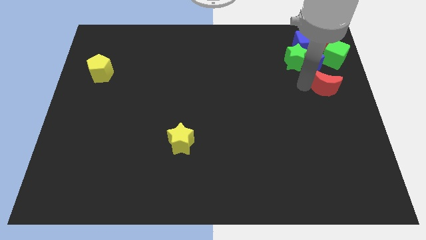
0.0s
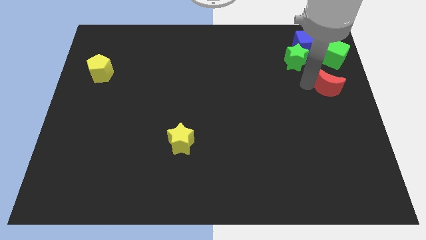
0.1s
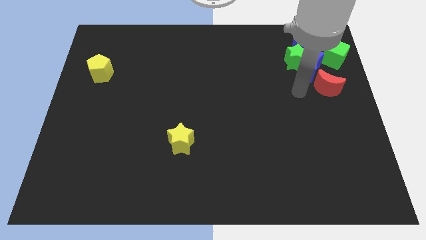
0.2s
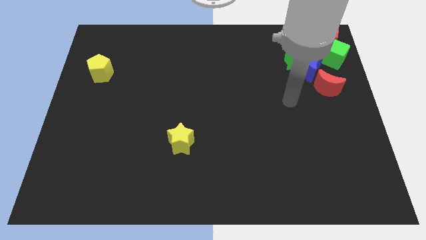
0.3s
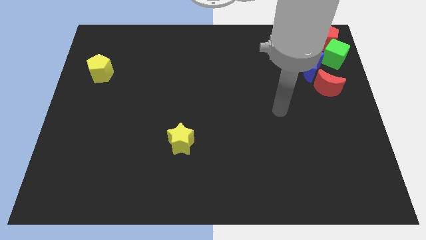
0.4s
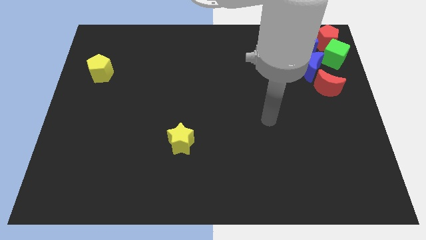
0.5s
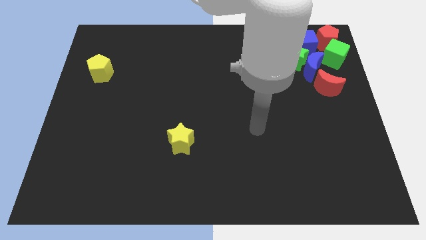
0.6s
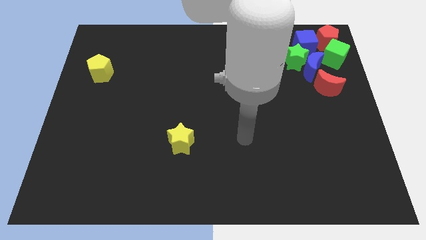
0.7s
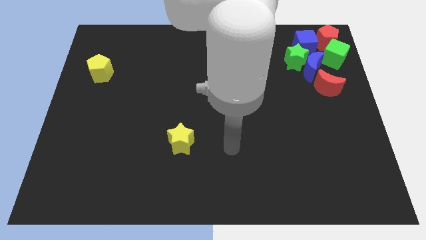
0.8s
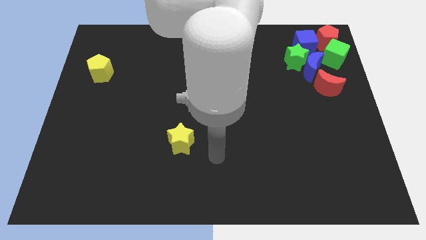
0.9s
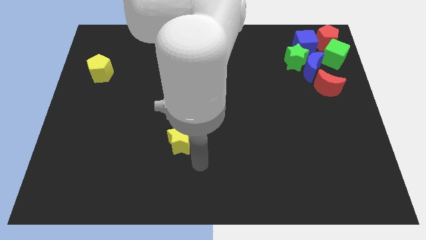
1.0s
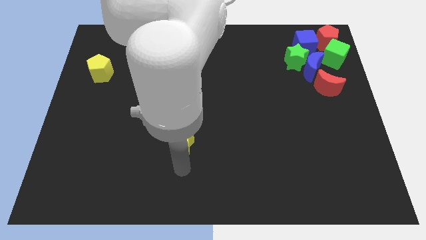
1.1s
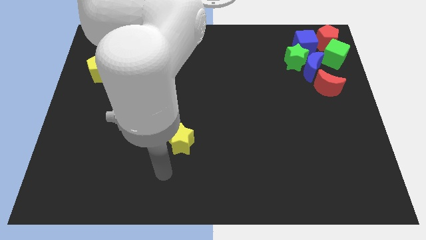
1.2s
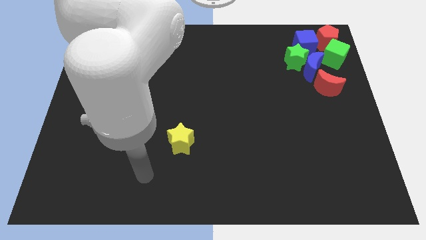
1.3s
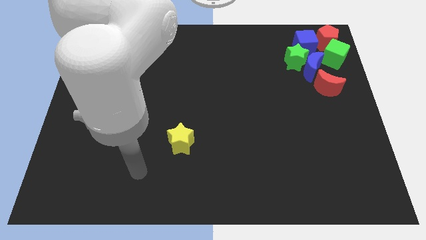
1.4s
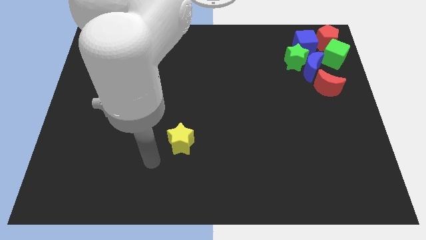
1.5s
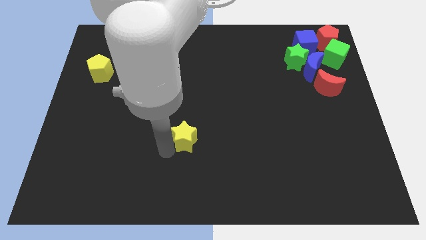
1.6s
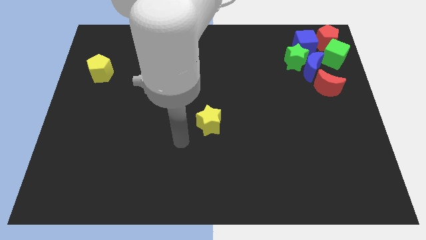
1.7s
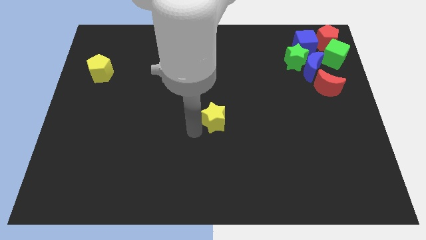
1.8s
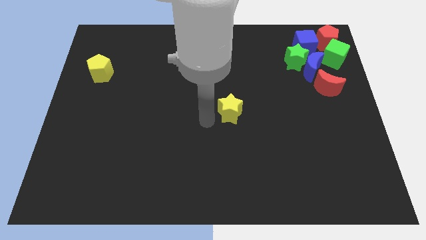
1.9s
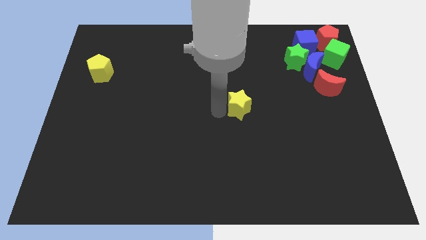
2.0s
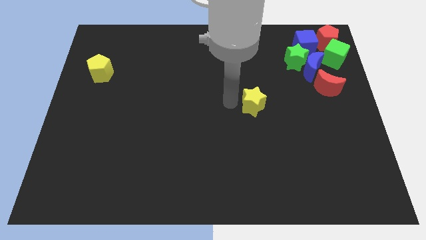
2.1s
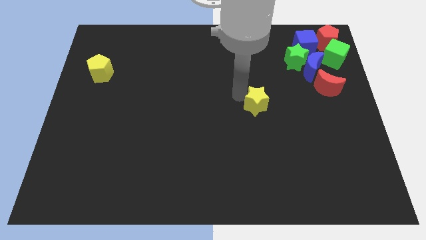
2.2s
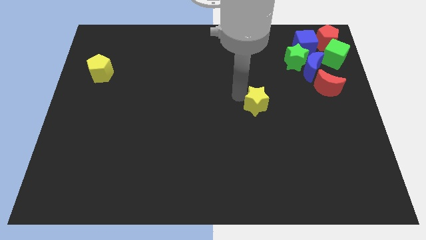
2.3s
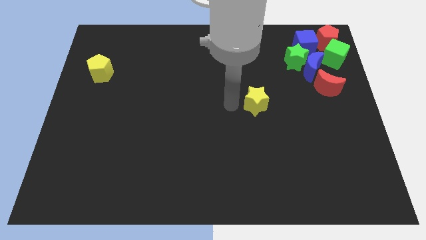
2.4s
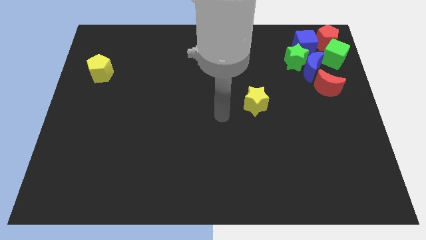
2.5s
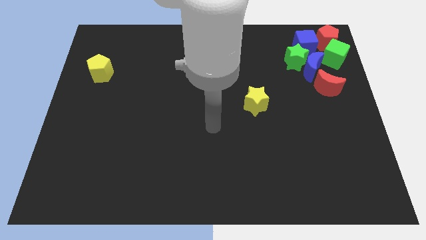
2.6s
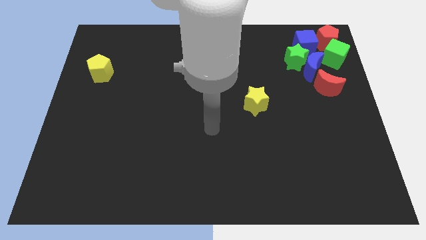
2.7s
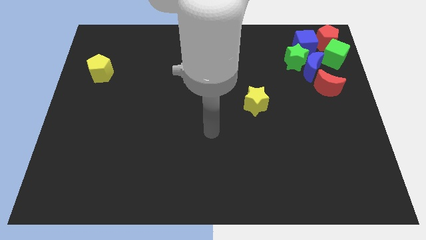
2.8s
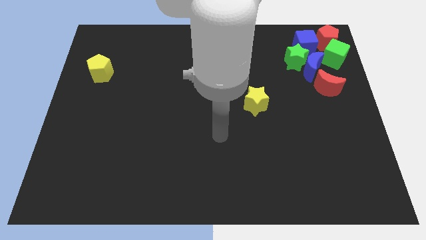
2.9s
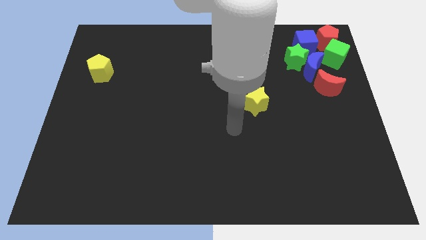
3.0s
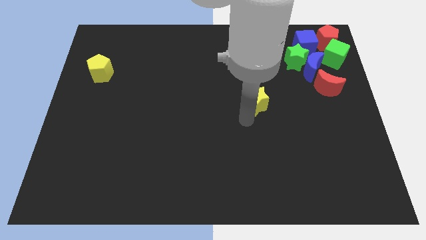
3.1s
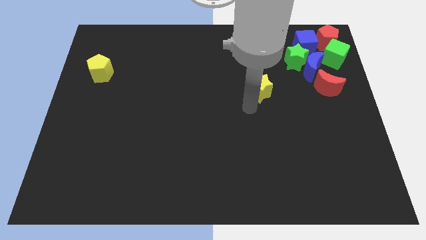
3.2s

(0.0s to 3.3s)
move the yellow star towards top

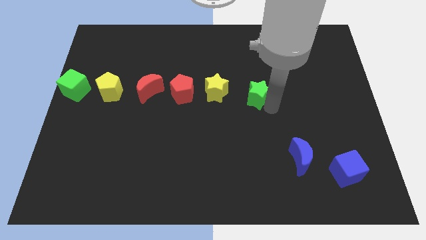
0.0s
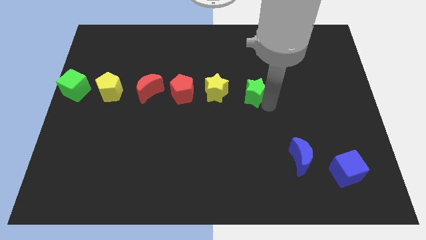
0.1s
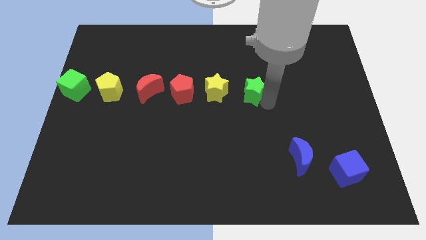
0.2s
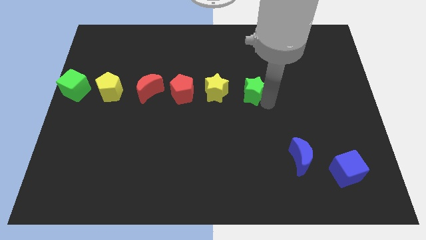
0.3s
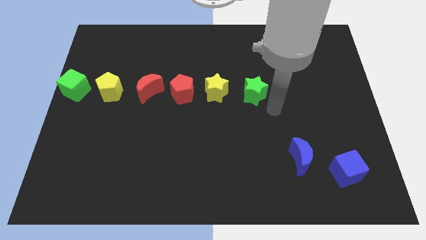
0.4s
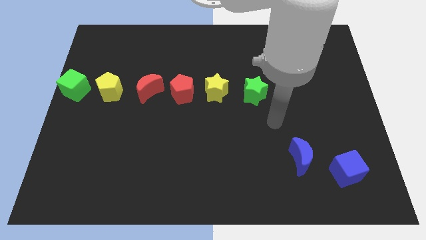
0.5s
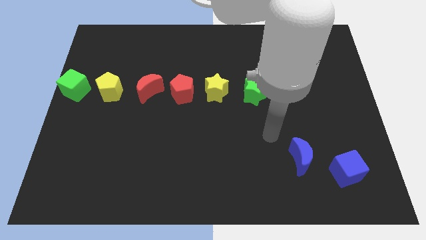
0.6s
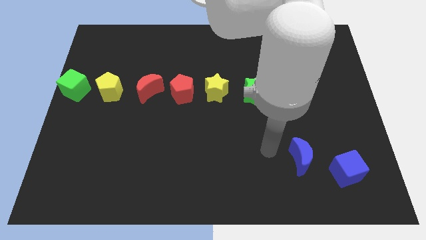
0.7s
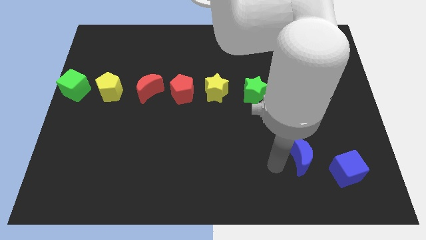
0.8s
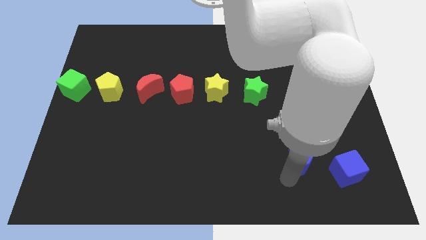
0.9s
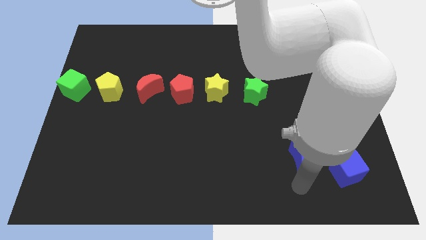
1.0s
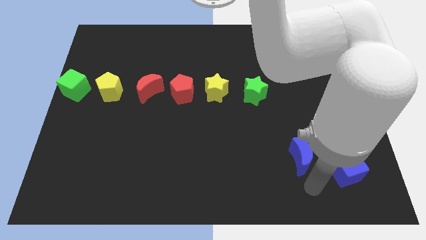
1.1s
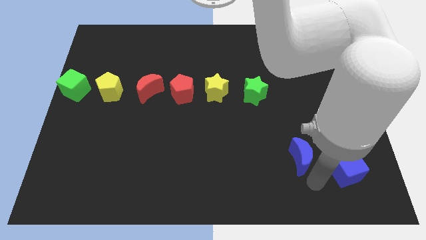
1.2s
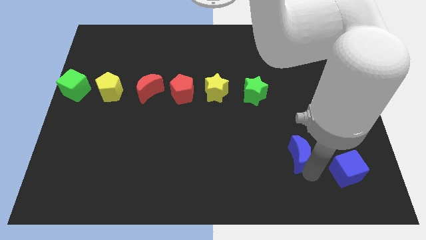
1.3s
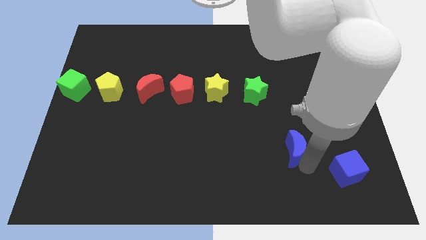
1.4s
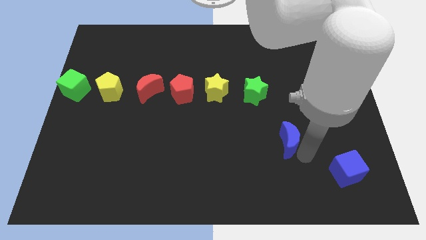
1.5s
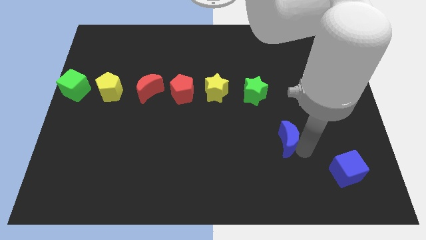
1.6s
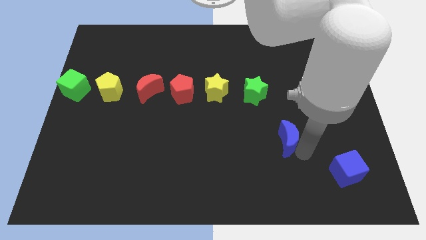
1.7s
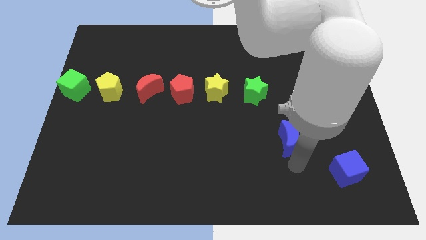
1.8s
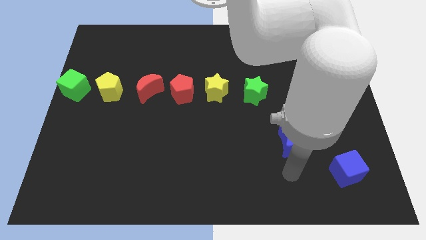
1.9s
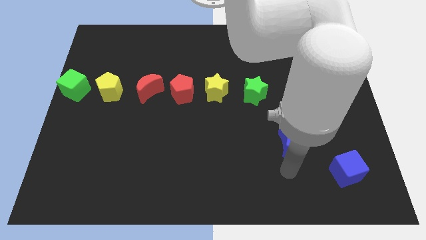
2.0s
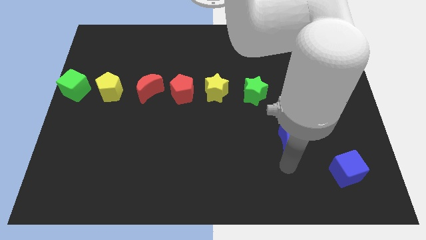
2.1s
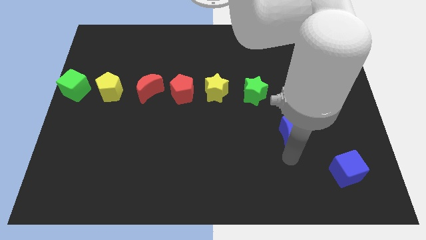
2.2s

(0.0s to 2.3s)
slide the blue crescent diagonally to blue cube

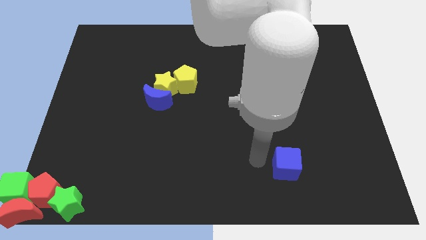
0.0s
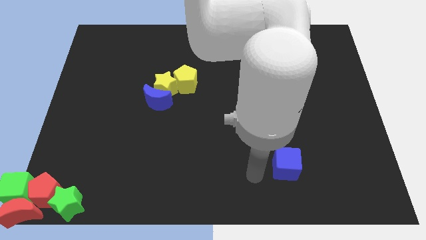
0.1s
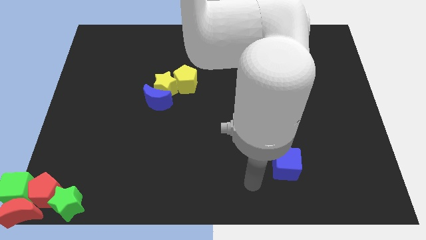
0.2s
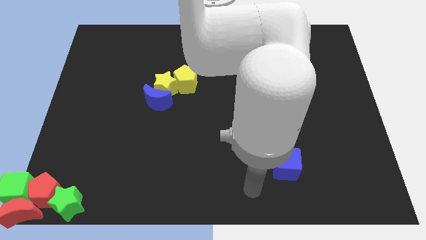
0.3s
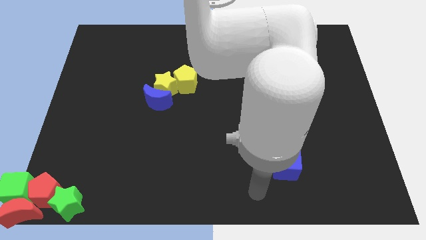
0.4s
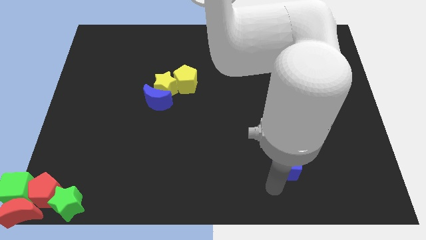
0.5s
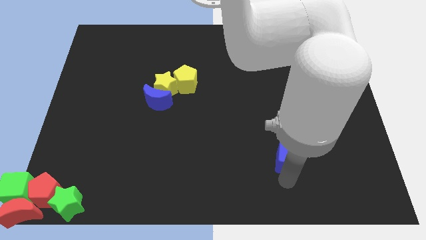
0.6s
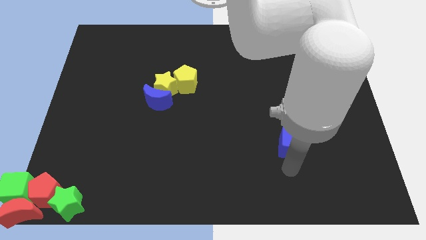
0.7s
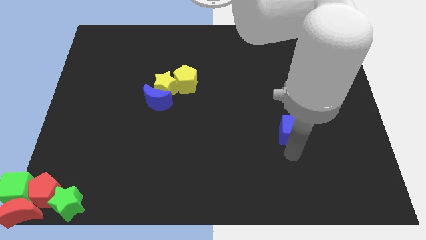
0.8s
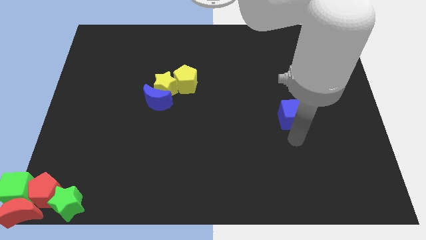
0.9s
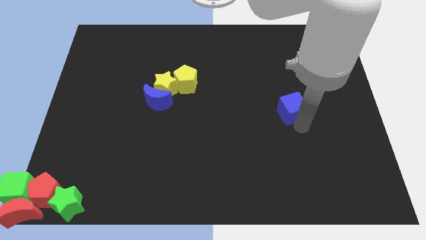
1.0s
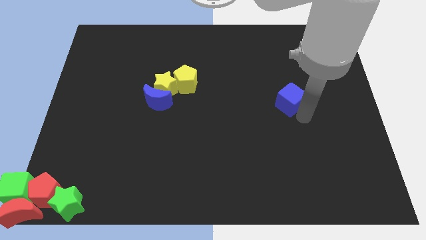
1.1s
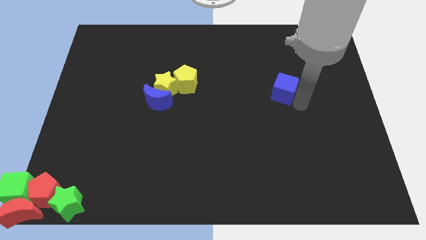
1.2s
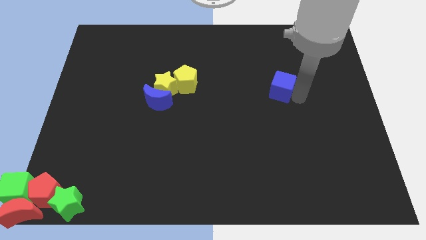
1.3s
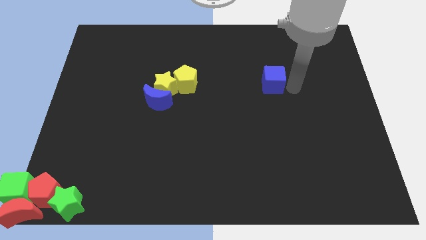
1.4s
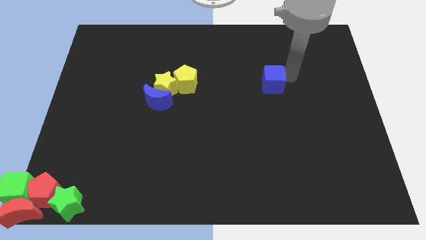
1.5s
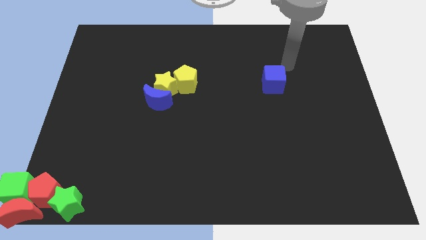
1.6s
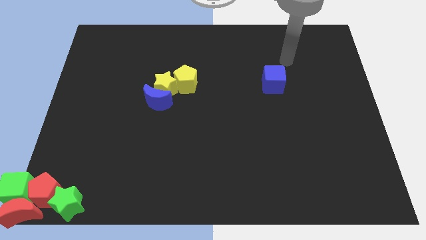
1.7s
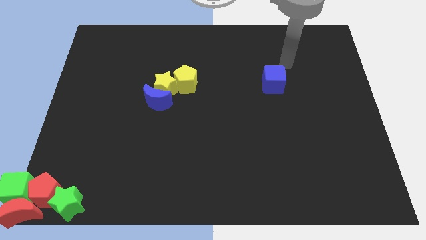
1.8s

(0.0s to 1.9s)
move the blue cube horizontally to the right side of the yellow pentagon

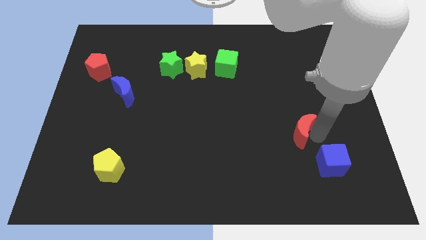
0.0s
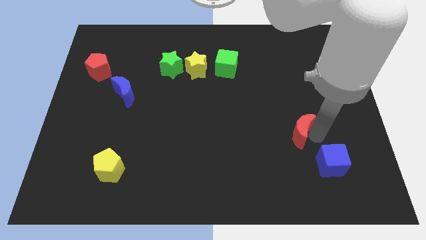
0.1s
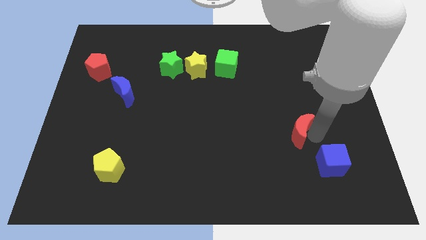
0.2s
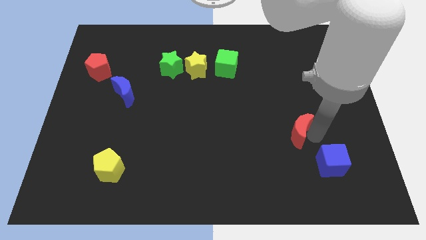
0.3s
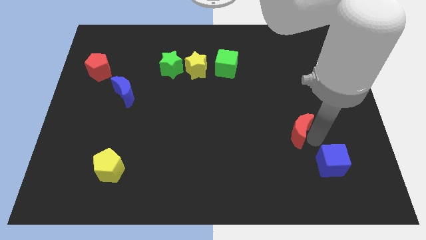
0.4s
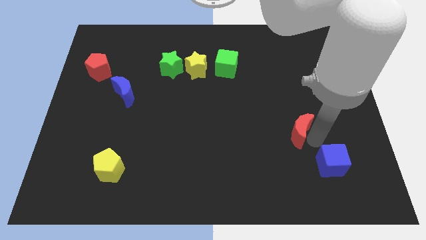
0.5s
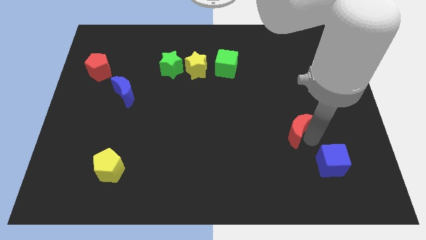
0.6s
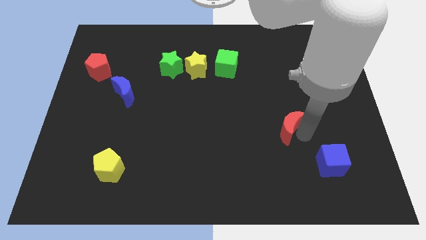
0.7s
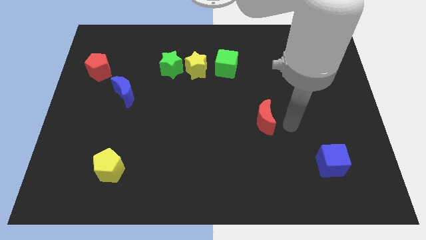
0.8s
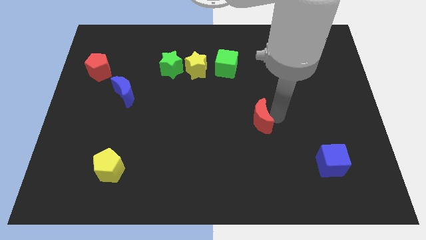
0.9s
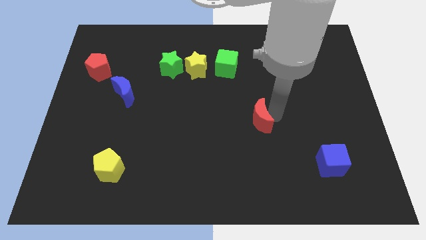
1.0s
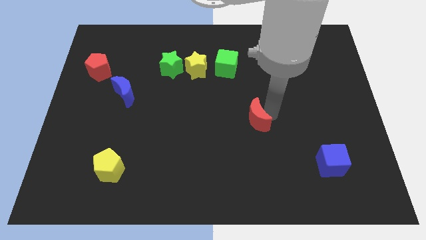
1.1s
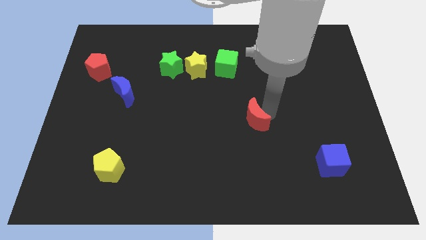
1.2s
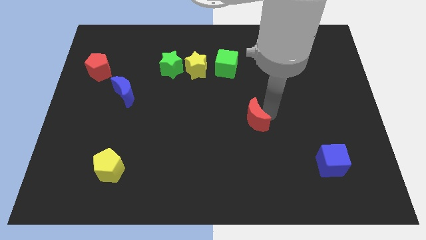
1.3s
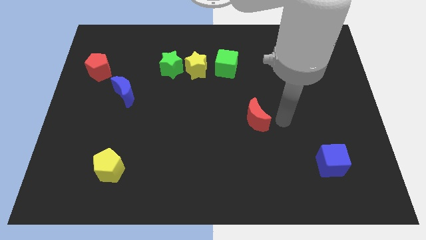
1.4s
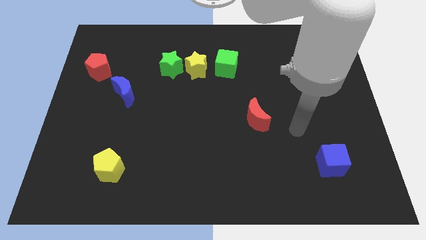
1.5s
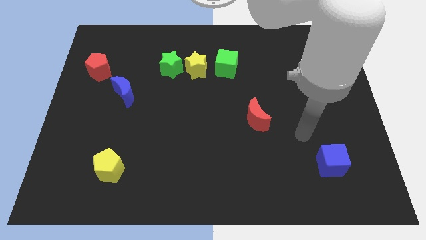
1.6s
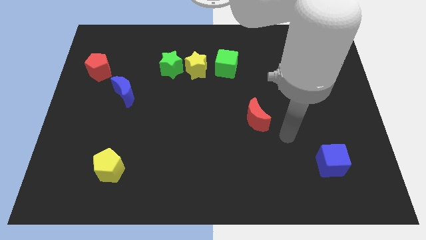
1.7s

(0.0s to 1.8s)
push the red moon diagonally to the green cube
